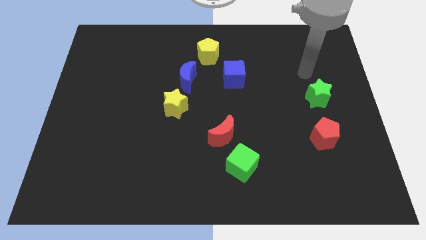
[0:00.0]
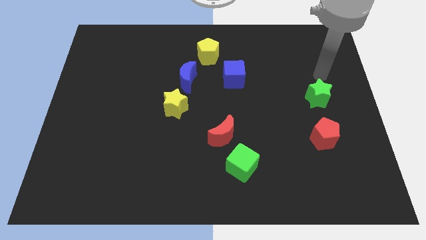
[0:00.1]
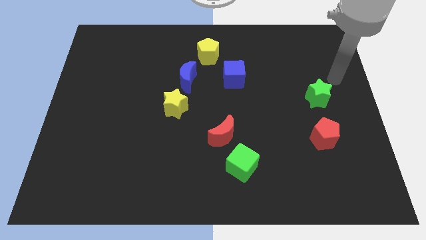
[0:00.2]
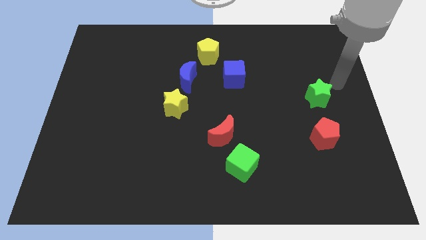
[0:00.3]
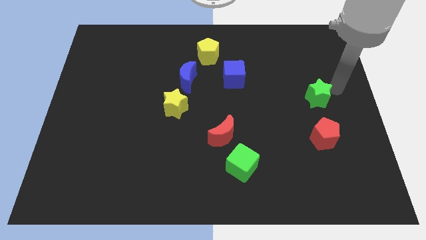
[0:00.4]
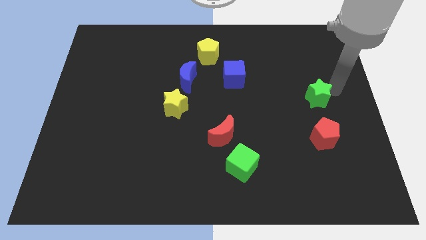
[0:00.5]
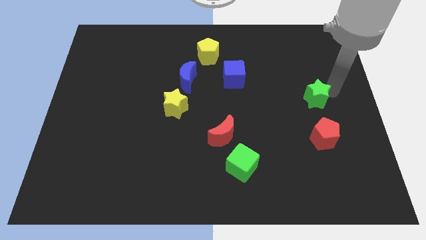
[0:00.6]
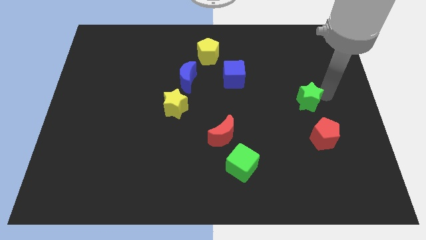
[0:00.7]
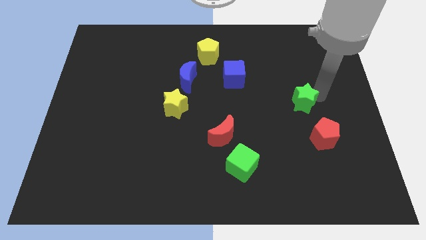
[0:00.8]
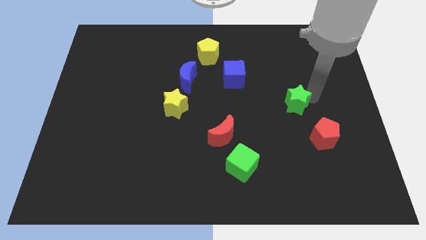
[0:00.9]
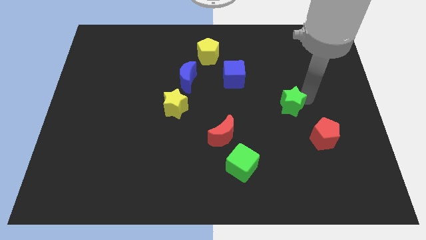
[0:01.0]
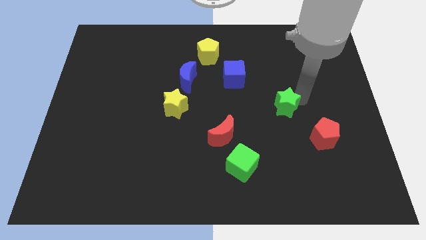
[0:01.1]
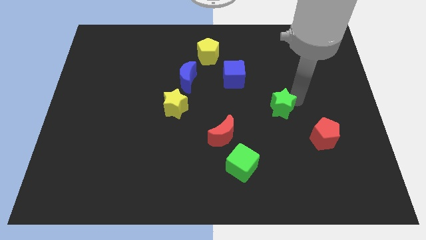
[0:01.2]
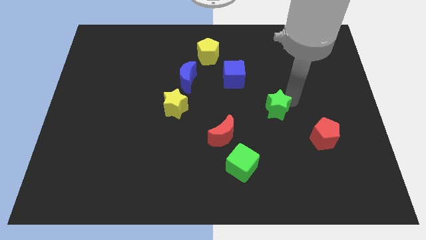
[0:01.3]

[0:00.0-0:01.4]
place the green star between the blue cube and red pentagon

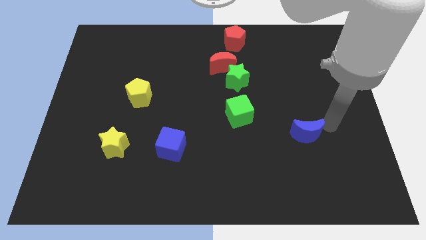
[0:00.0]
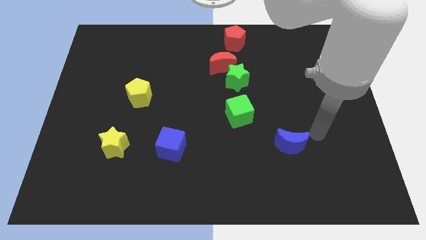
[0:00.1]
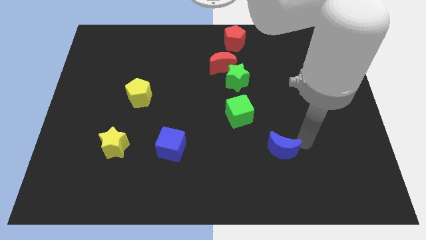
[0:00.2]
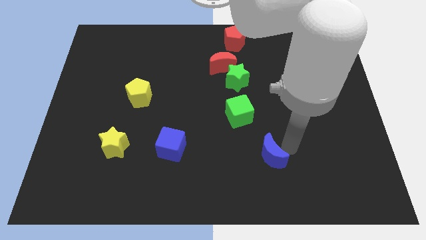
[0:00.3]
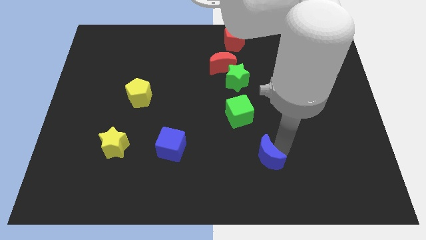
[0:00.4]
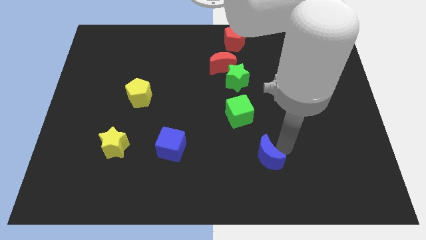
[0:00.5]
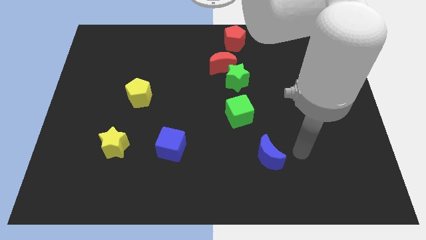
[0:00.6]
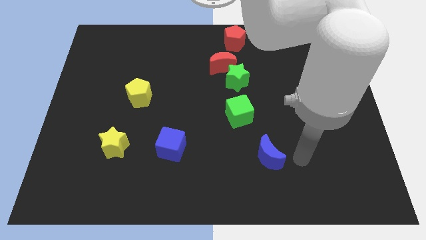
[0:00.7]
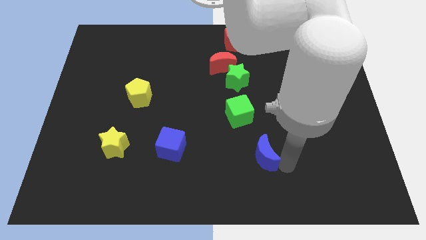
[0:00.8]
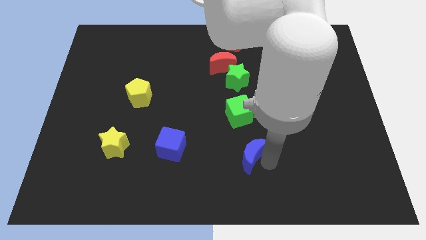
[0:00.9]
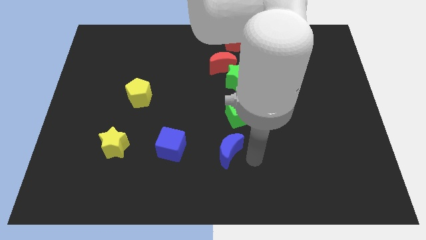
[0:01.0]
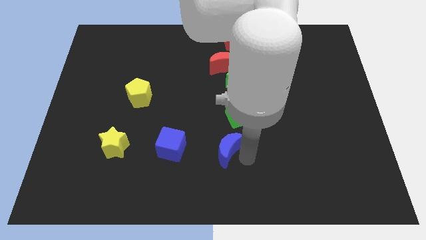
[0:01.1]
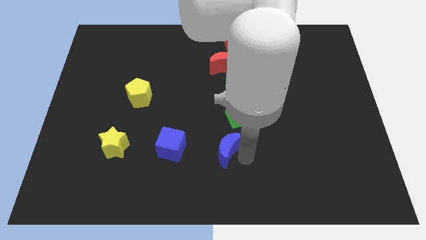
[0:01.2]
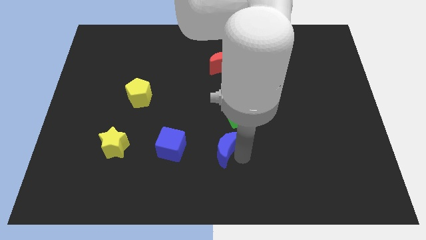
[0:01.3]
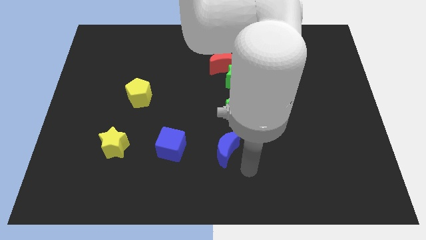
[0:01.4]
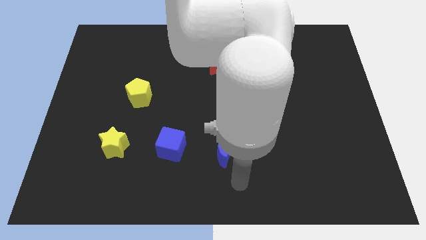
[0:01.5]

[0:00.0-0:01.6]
push the blue moon right to the blue cube

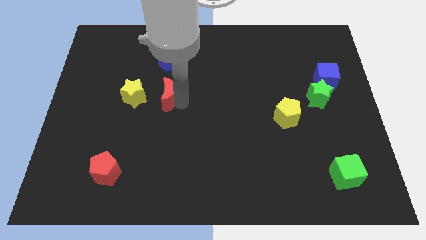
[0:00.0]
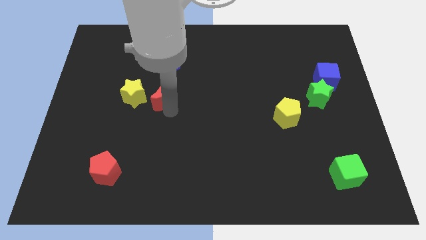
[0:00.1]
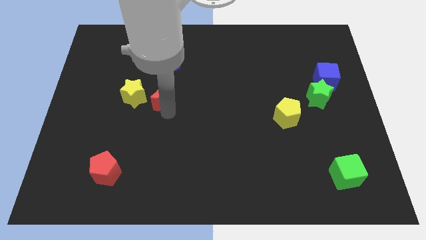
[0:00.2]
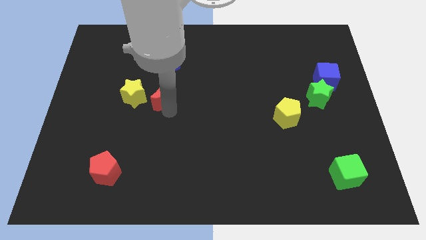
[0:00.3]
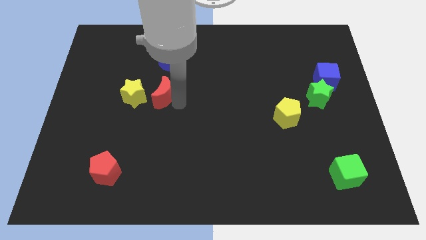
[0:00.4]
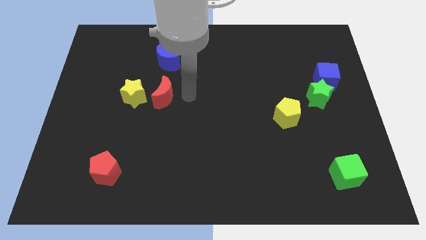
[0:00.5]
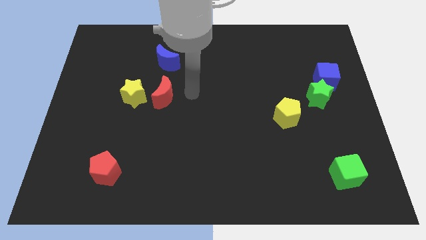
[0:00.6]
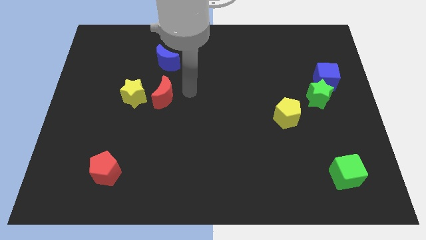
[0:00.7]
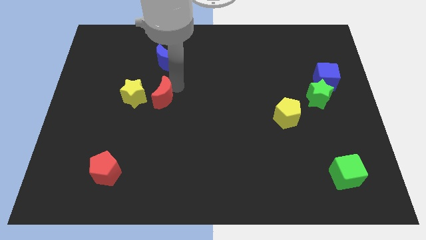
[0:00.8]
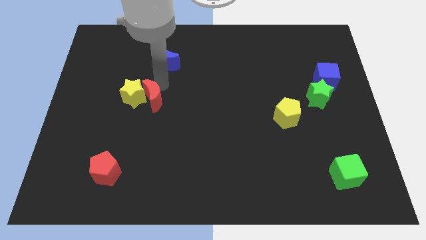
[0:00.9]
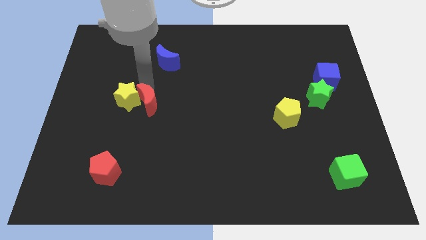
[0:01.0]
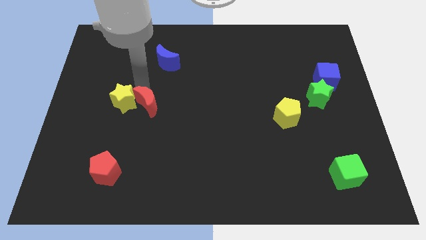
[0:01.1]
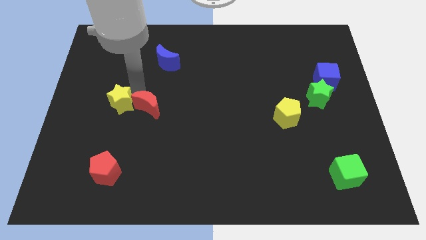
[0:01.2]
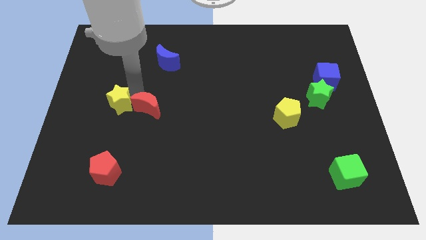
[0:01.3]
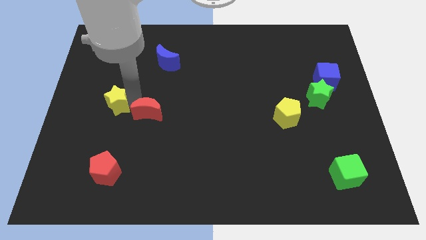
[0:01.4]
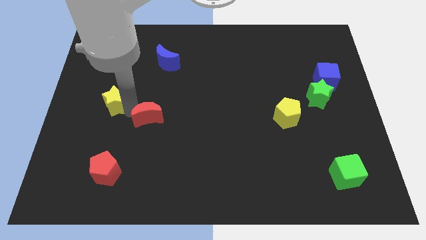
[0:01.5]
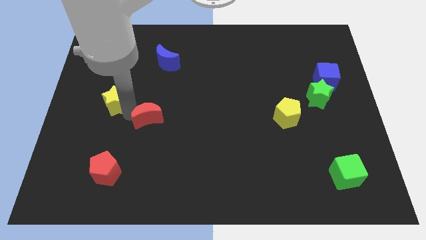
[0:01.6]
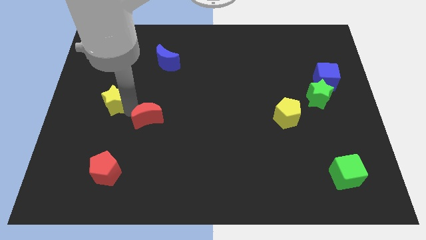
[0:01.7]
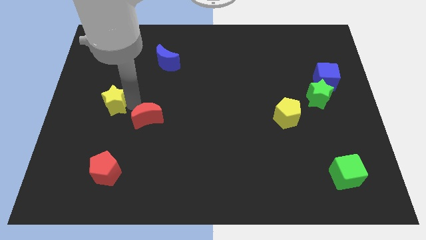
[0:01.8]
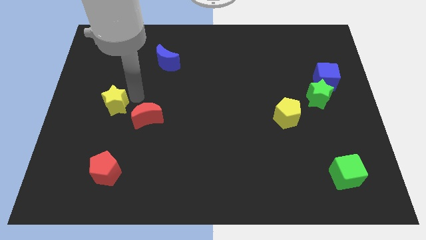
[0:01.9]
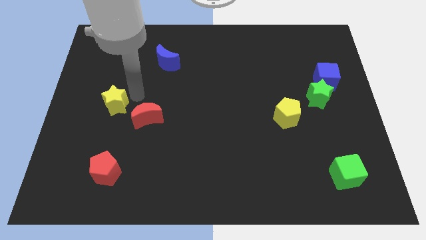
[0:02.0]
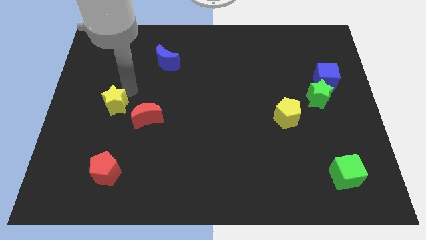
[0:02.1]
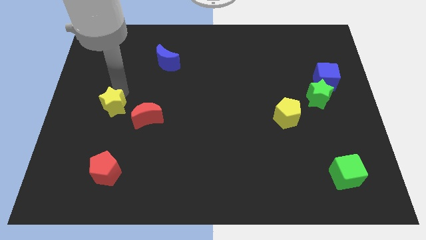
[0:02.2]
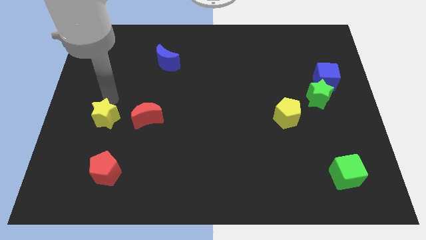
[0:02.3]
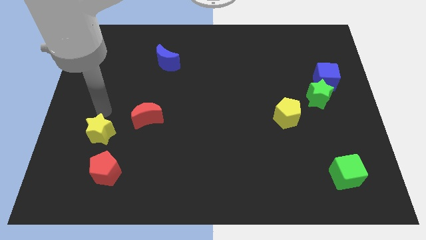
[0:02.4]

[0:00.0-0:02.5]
push red crescent slightly down

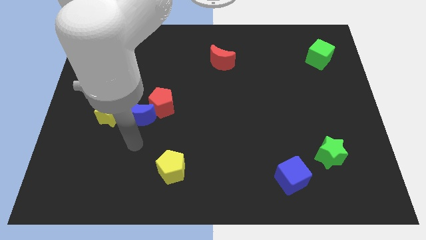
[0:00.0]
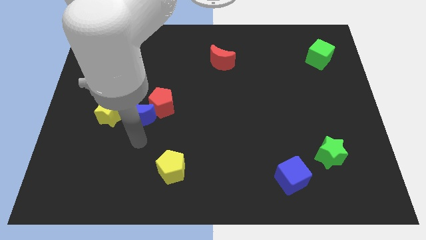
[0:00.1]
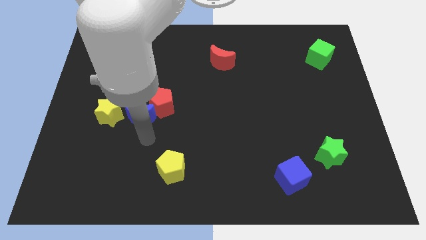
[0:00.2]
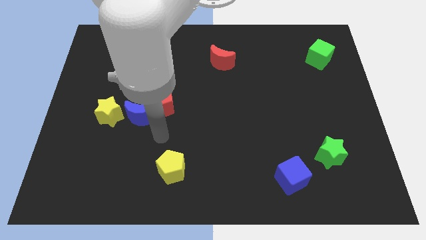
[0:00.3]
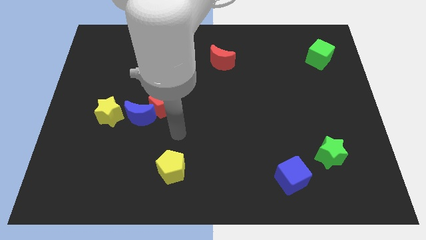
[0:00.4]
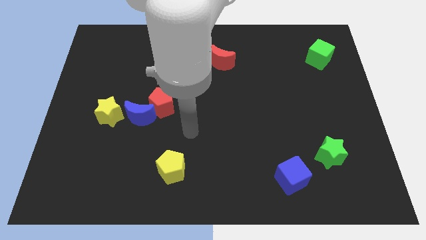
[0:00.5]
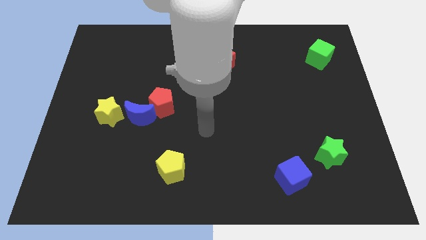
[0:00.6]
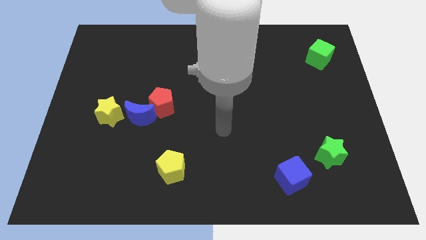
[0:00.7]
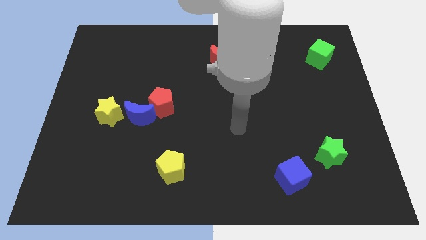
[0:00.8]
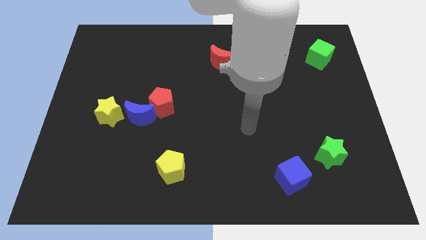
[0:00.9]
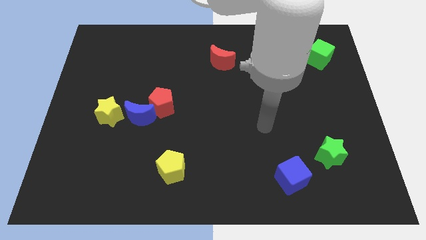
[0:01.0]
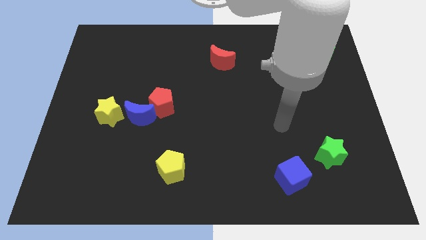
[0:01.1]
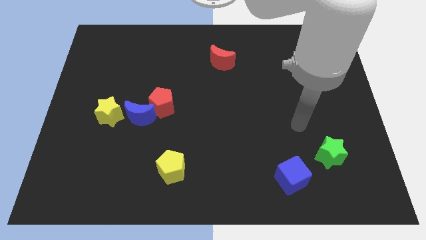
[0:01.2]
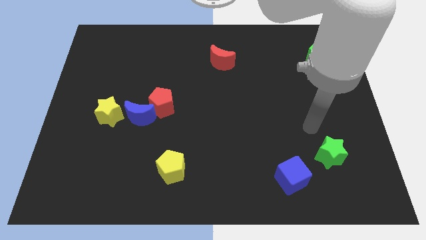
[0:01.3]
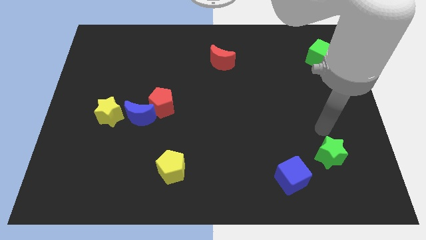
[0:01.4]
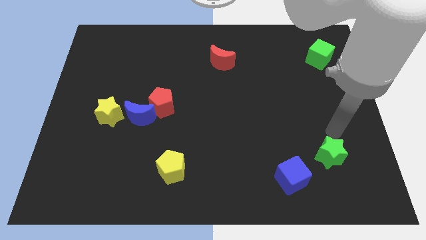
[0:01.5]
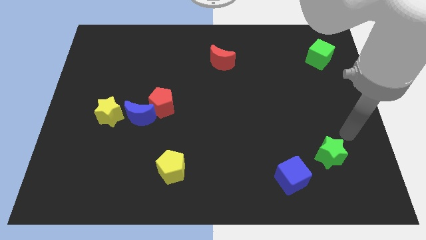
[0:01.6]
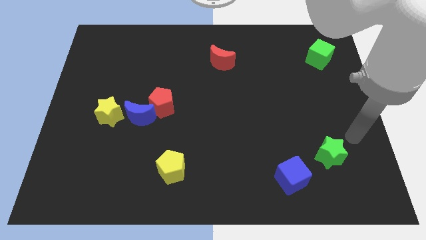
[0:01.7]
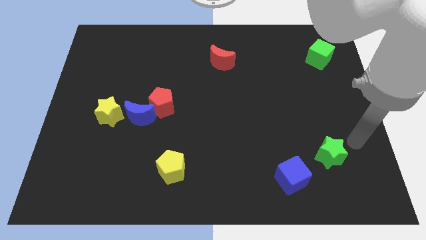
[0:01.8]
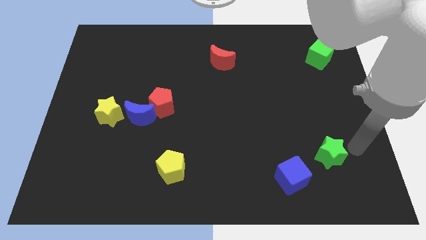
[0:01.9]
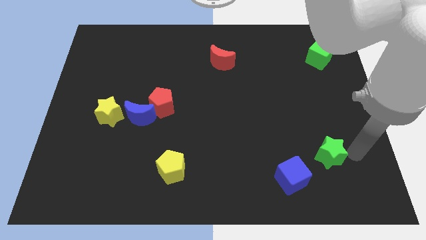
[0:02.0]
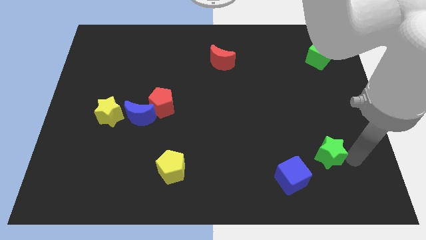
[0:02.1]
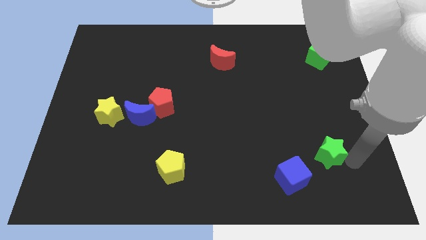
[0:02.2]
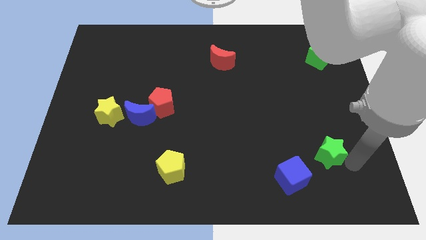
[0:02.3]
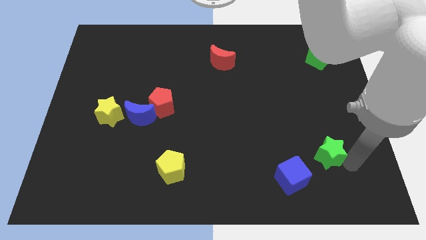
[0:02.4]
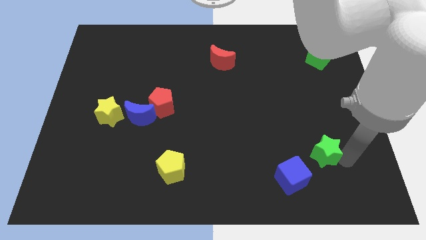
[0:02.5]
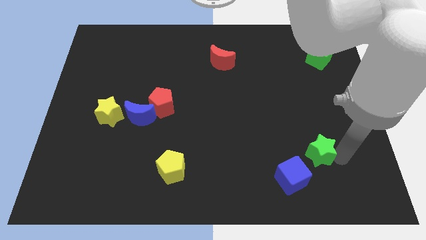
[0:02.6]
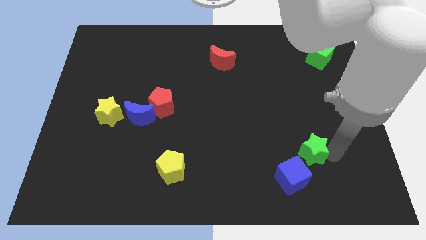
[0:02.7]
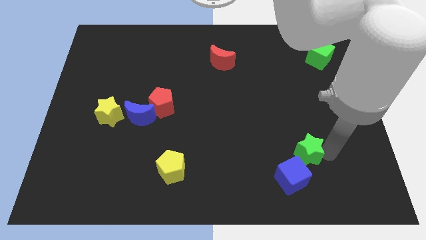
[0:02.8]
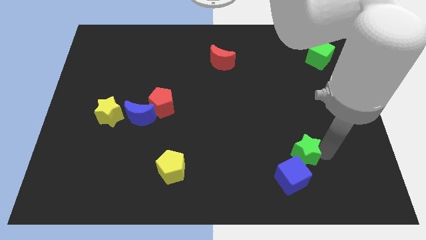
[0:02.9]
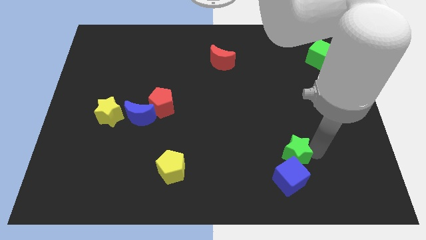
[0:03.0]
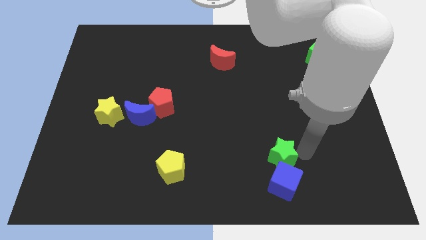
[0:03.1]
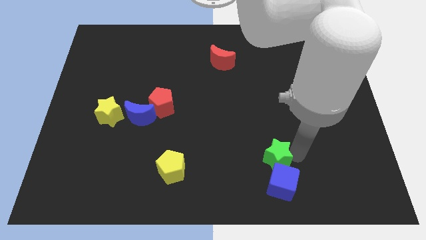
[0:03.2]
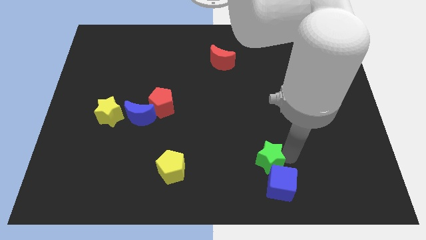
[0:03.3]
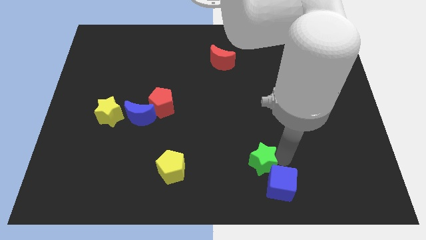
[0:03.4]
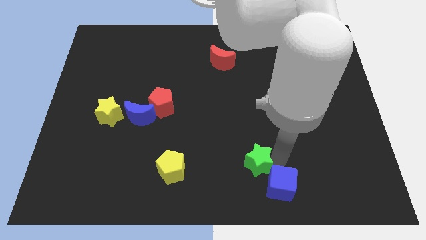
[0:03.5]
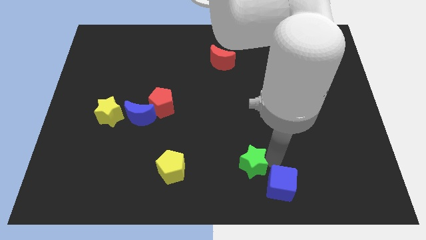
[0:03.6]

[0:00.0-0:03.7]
slide the green star to the top left of the blue cube
